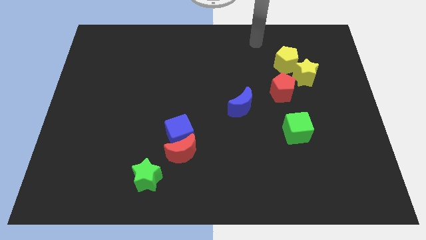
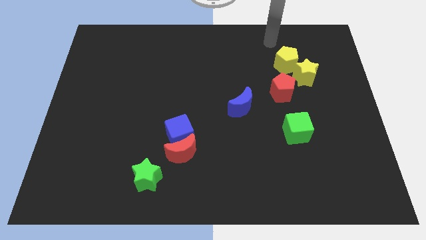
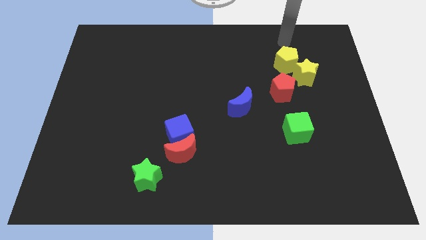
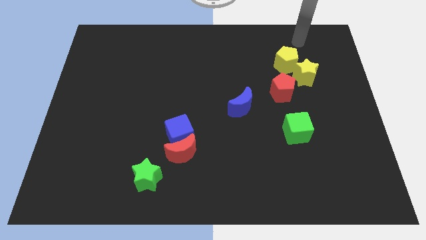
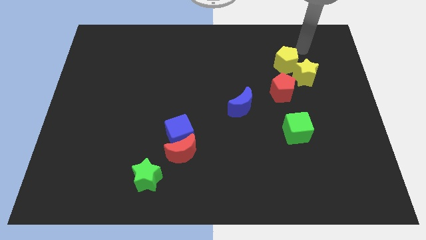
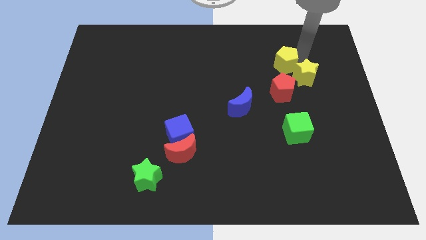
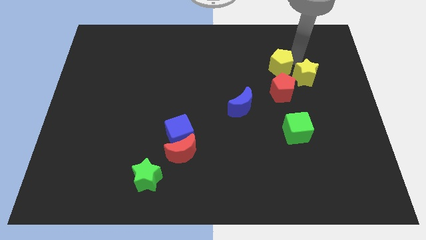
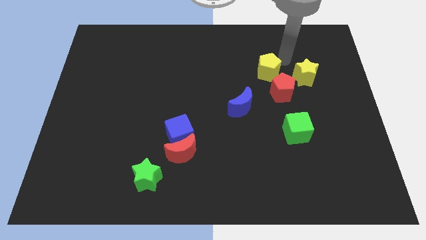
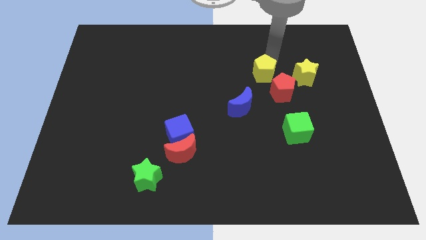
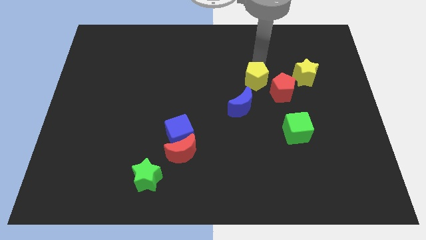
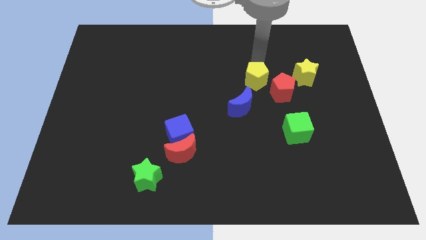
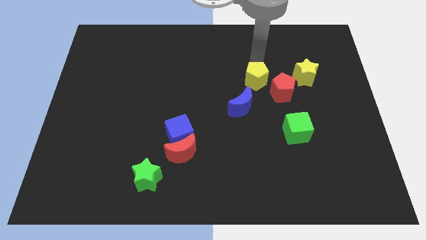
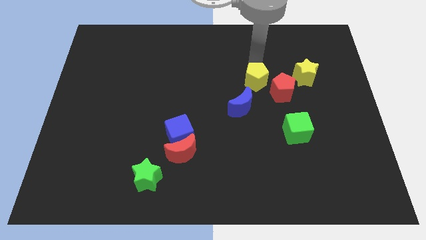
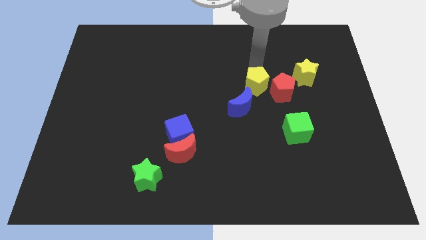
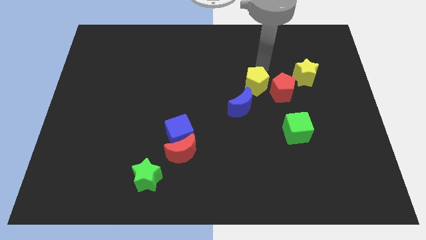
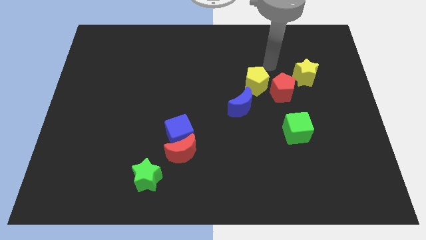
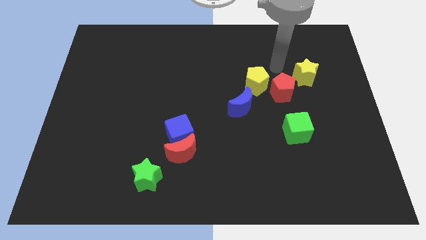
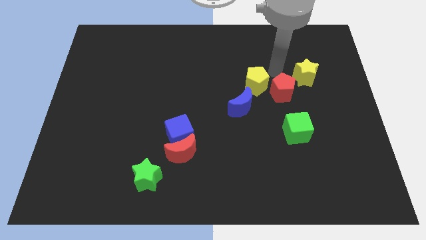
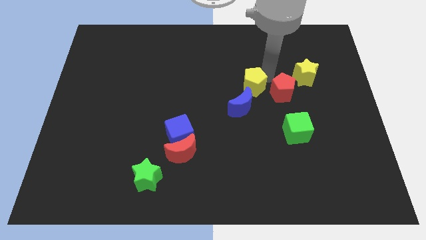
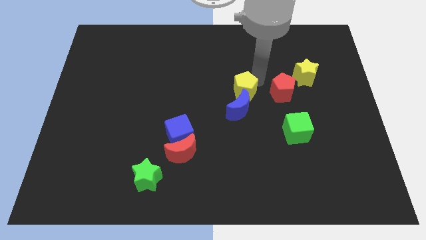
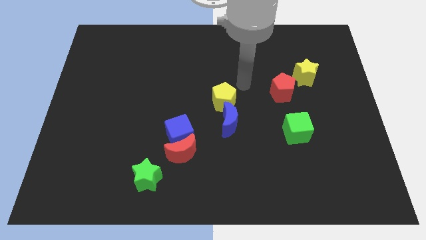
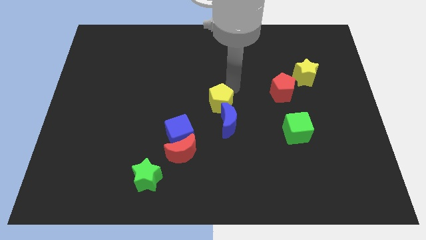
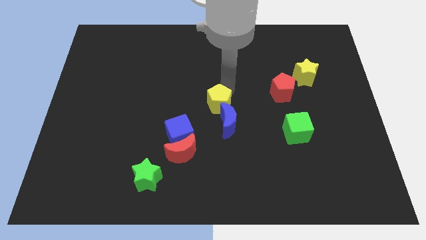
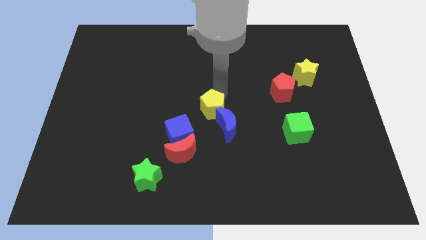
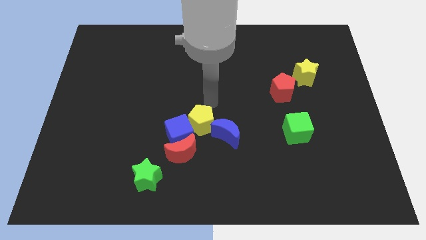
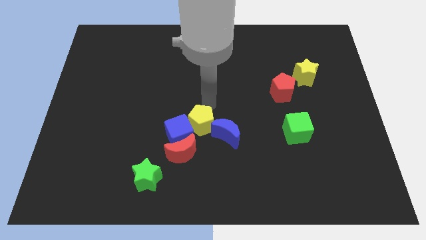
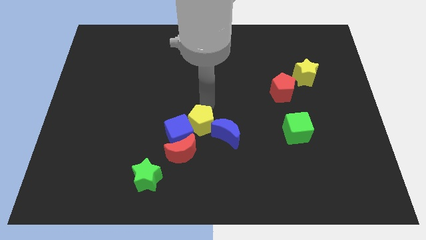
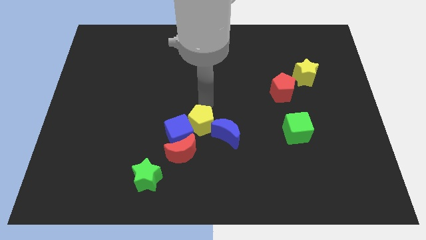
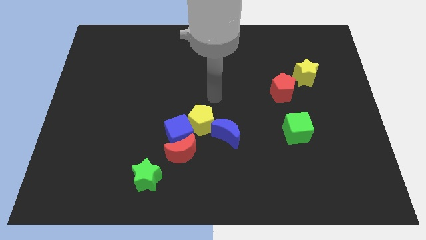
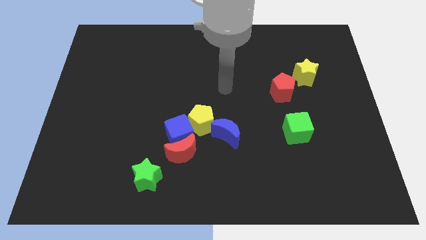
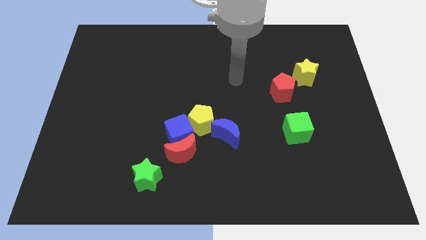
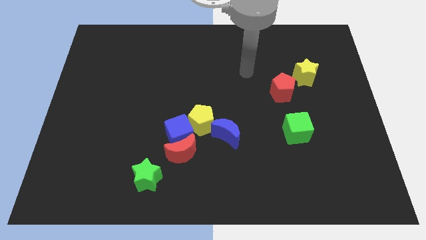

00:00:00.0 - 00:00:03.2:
push the blue moon to the left of the green cube

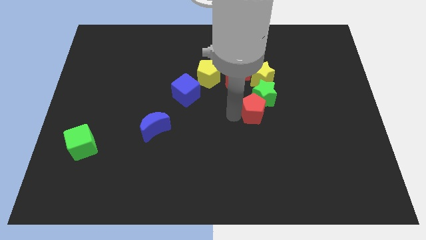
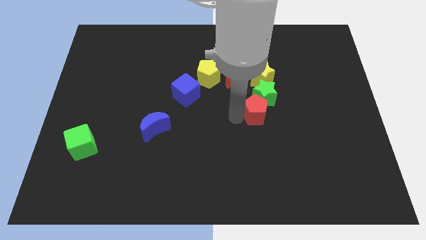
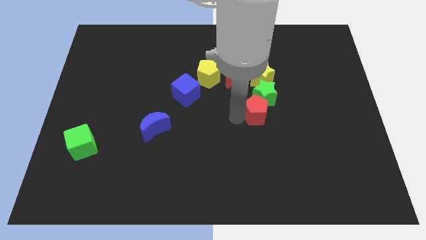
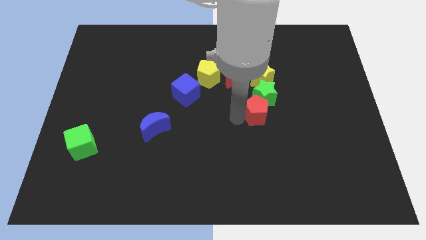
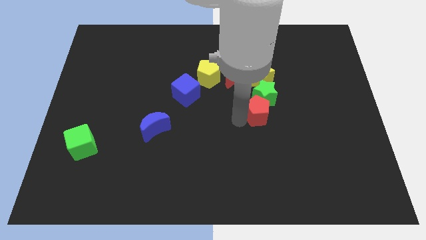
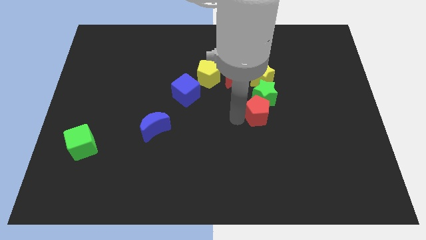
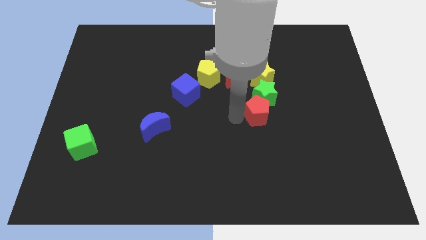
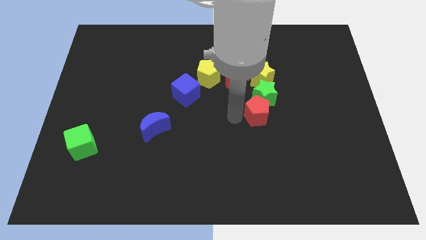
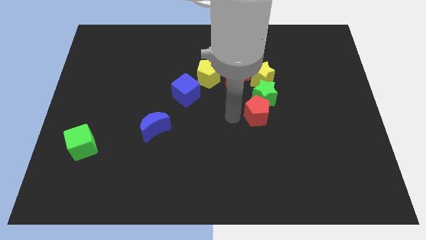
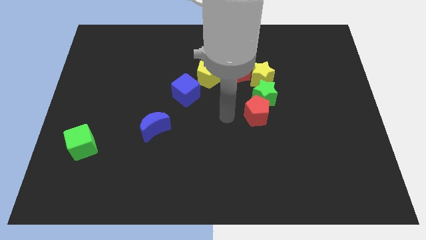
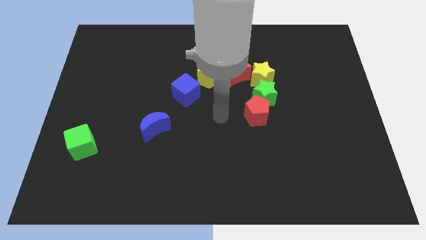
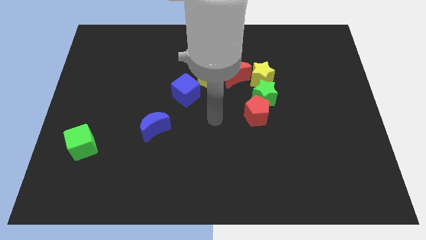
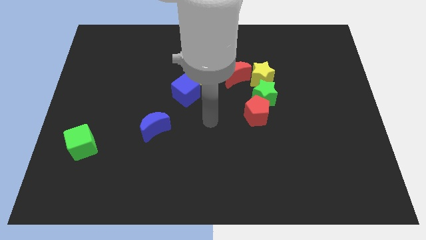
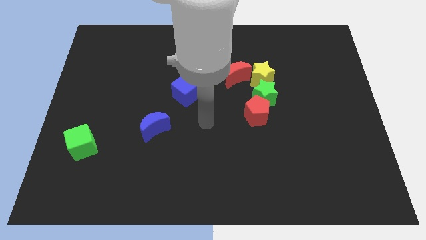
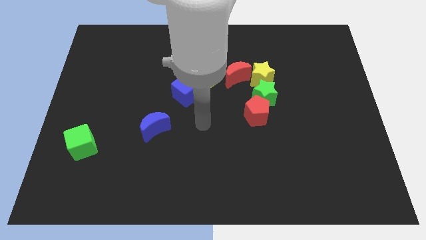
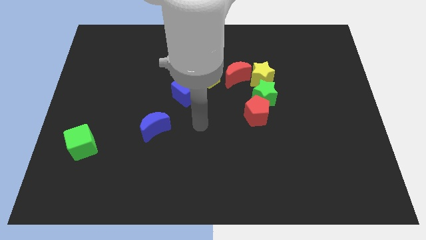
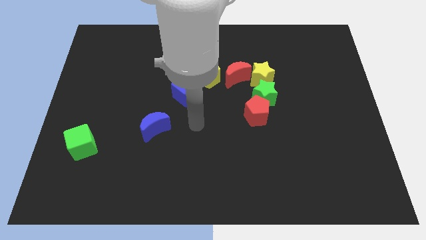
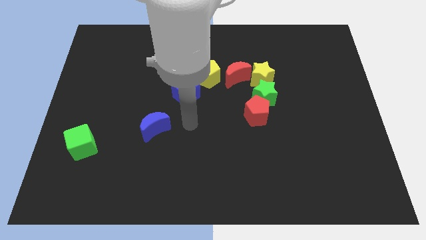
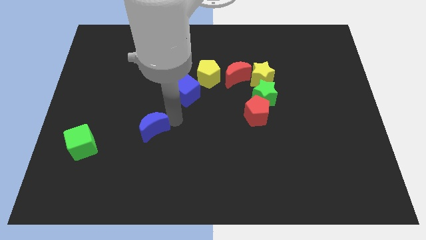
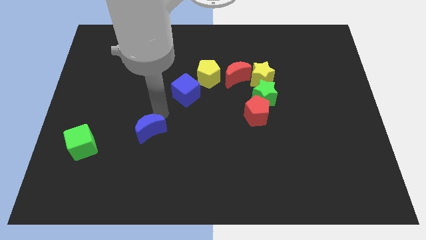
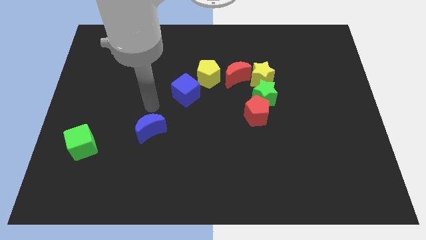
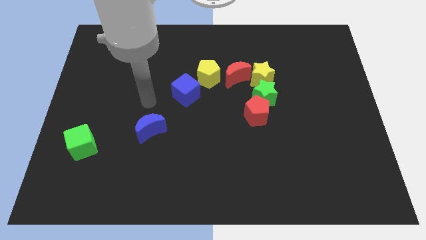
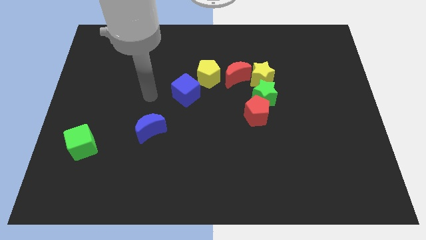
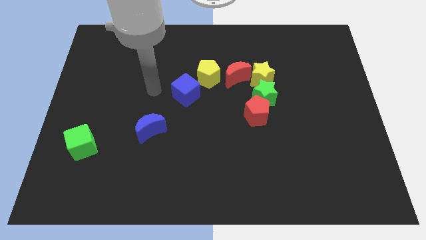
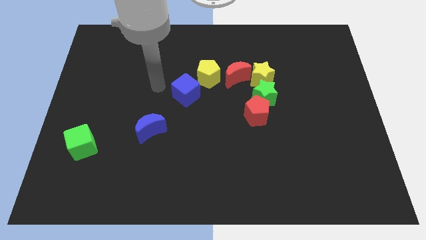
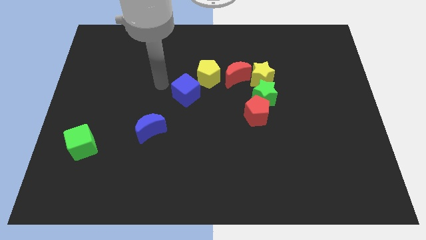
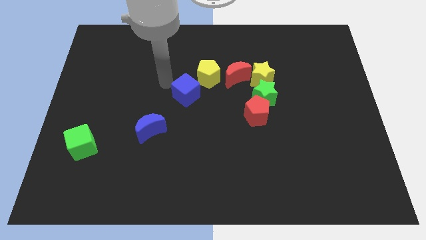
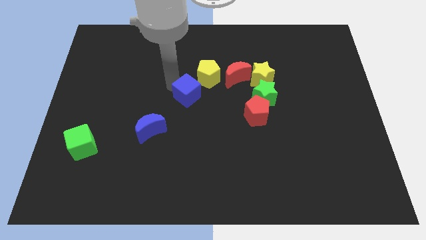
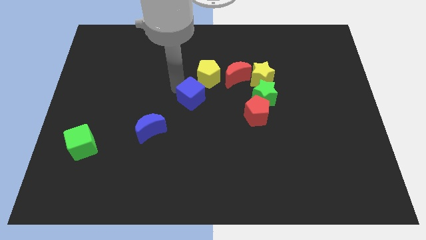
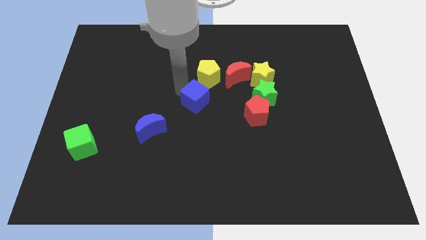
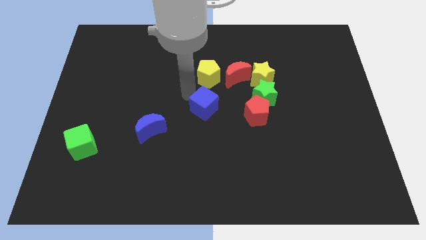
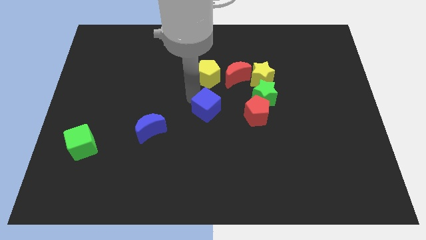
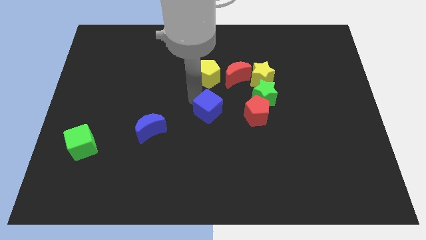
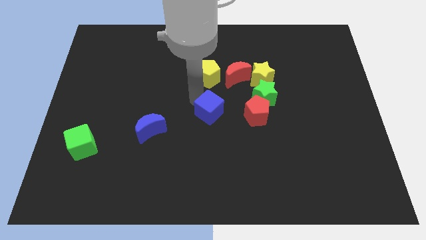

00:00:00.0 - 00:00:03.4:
place the blue cubed to the left of red pentagon

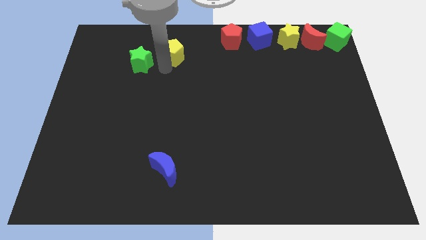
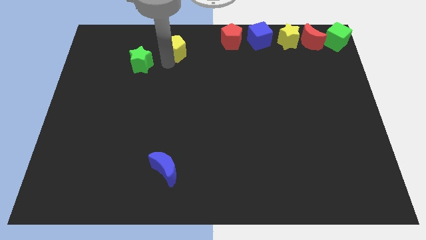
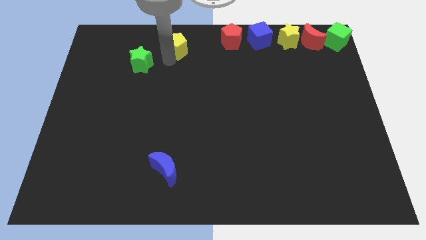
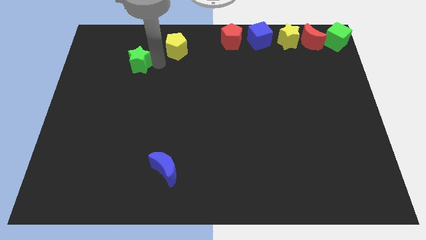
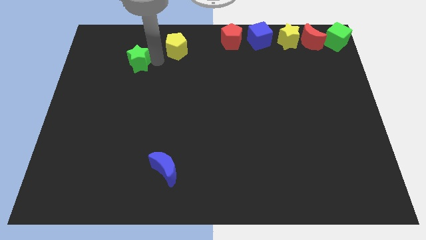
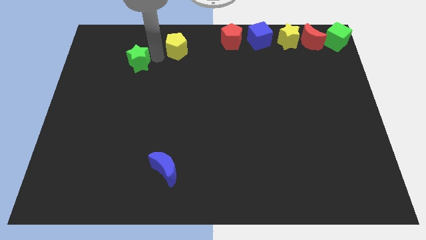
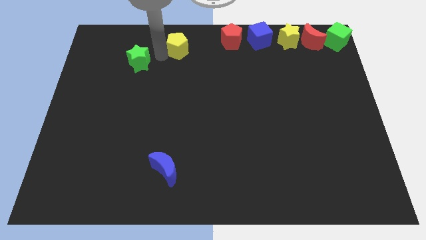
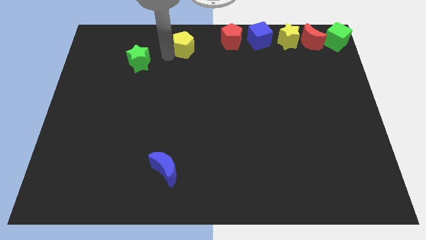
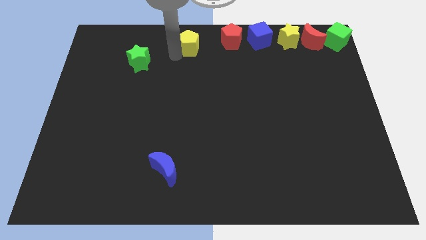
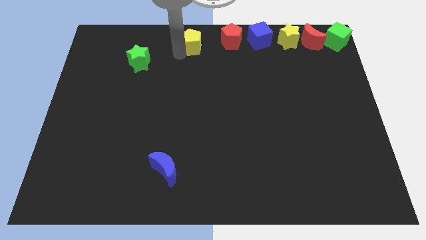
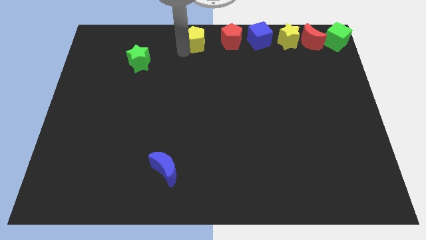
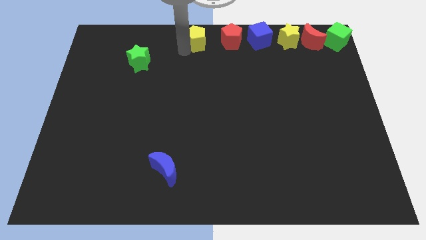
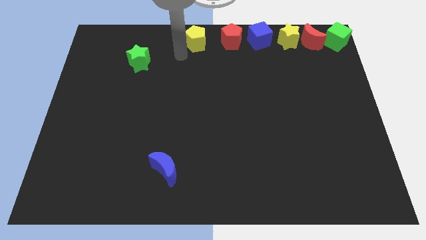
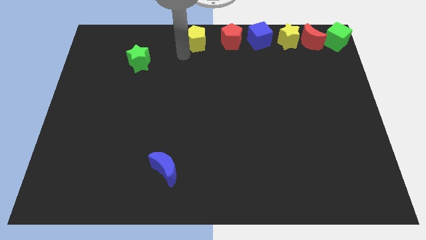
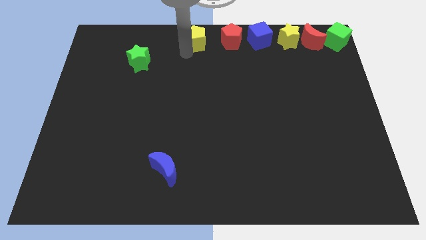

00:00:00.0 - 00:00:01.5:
push the yellow pentagon to the left of the red pentagon

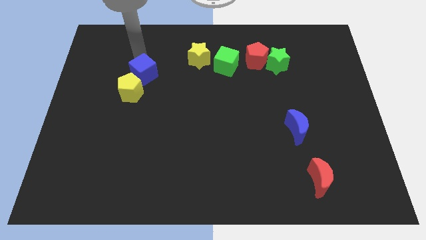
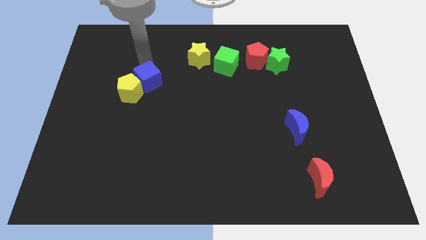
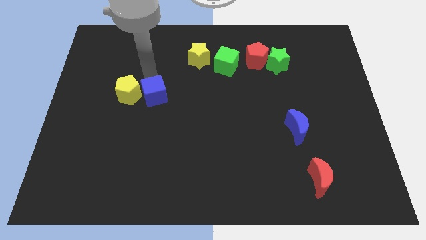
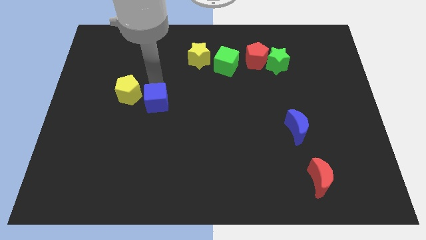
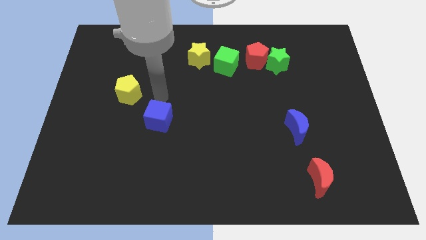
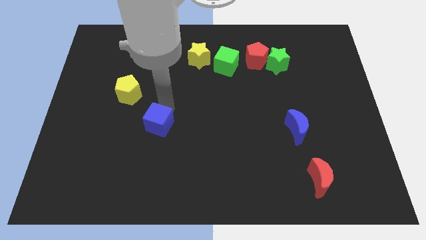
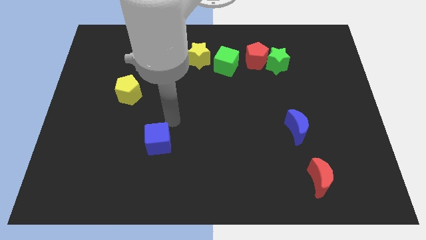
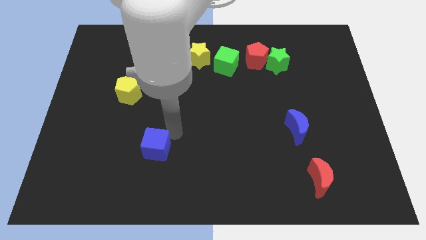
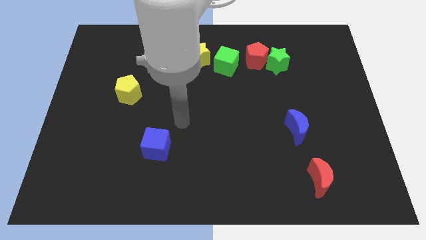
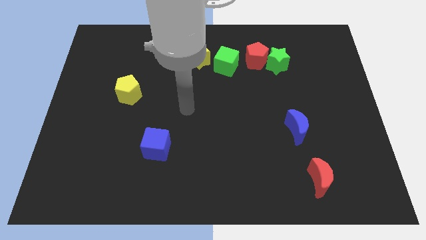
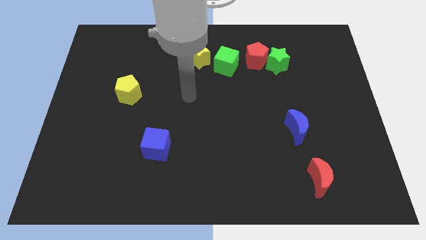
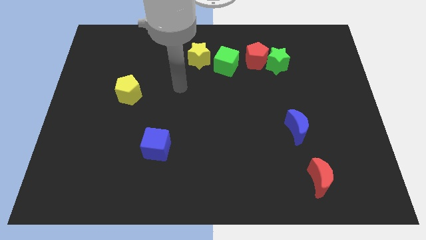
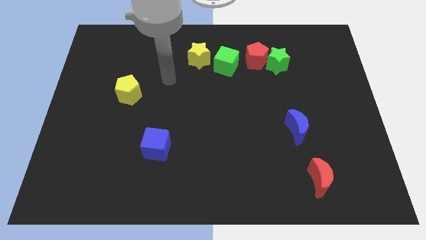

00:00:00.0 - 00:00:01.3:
move the blue cube towards bottom left
